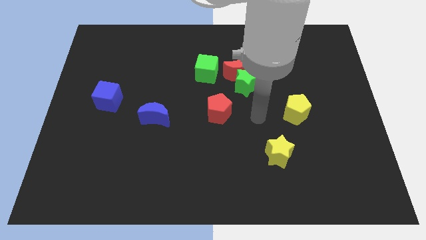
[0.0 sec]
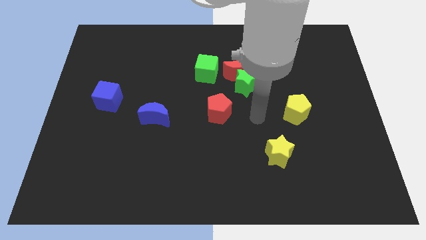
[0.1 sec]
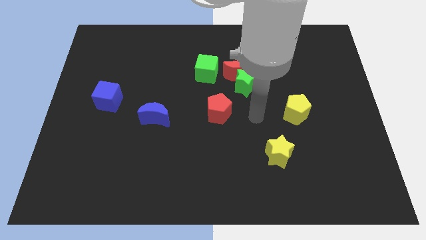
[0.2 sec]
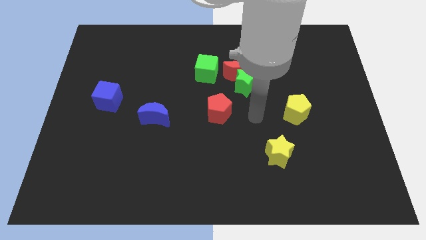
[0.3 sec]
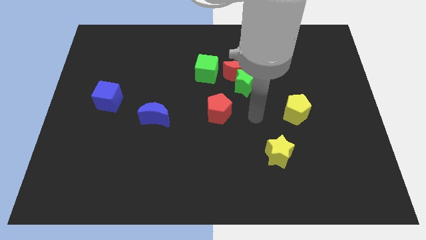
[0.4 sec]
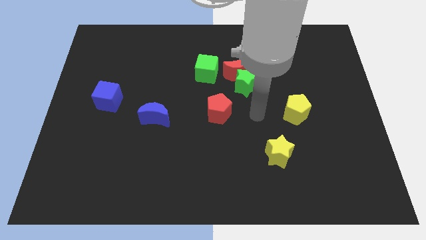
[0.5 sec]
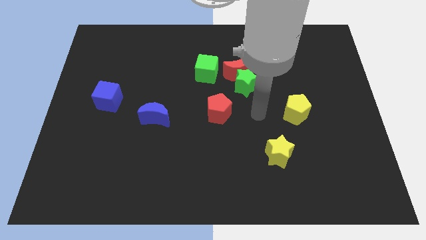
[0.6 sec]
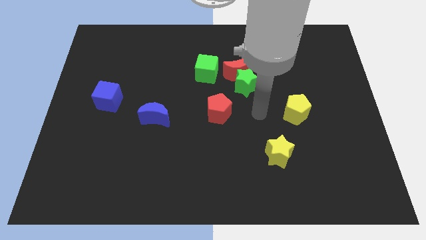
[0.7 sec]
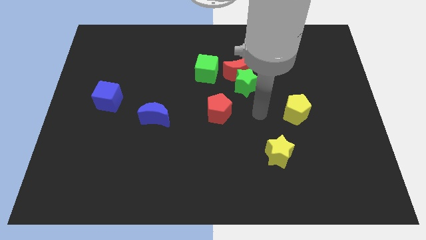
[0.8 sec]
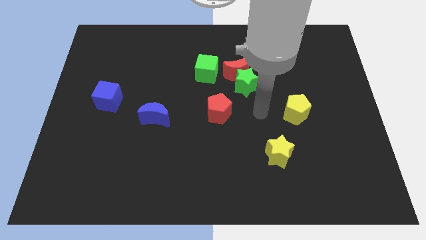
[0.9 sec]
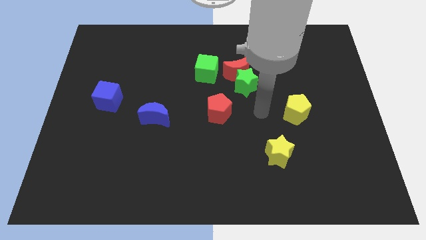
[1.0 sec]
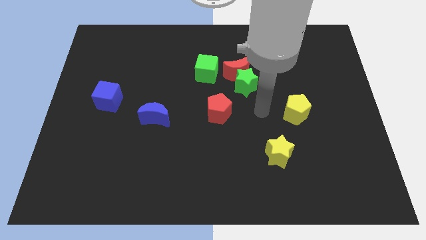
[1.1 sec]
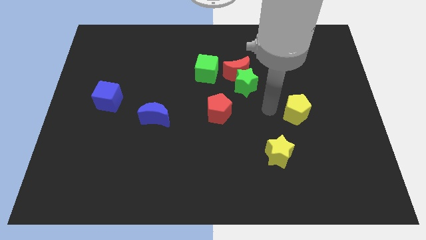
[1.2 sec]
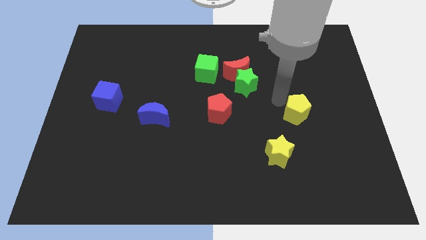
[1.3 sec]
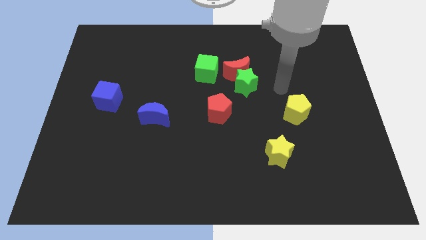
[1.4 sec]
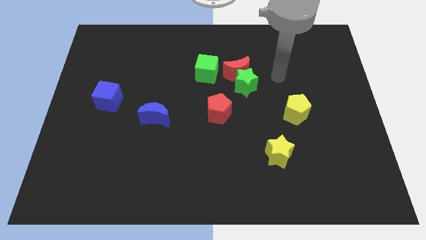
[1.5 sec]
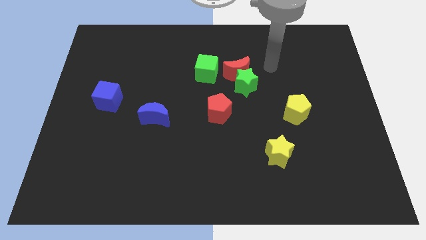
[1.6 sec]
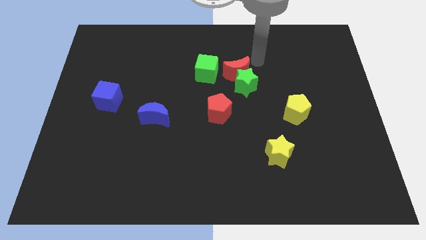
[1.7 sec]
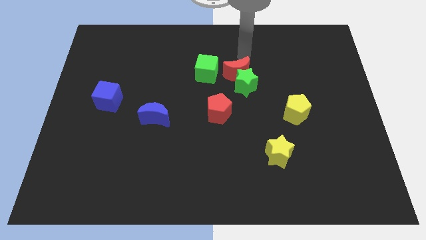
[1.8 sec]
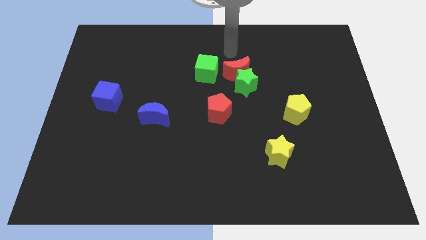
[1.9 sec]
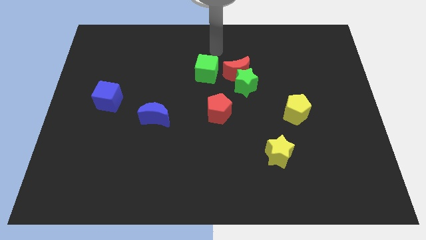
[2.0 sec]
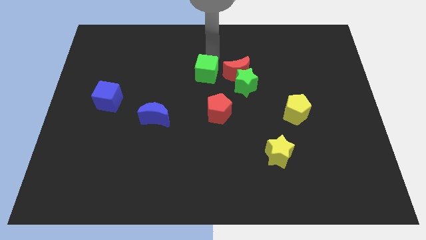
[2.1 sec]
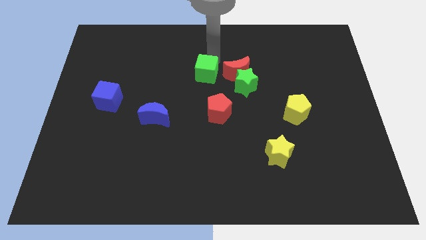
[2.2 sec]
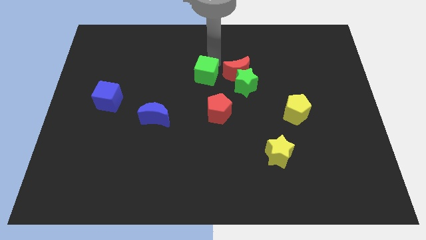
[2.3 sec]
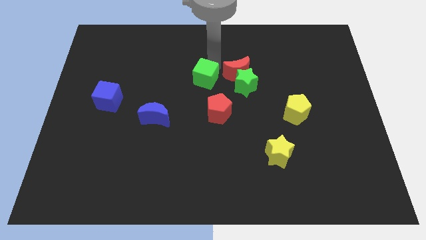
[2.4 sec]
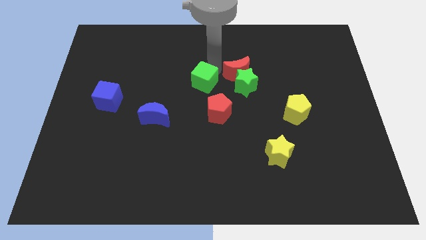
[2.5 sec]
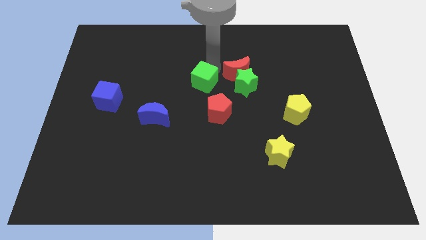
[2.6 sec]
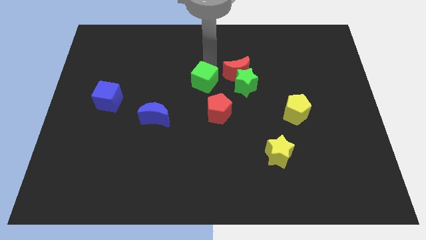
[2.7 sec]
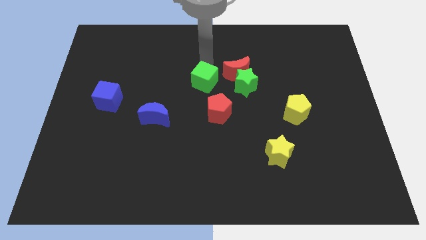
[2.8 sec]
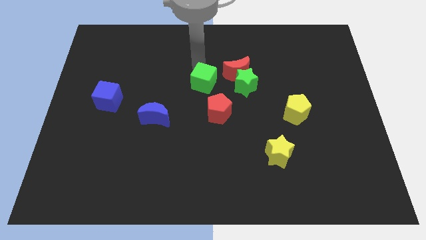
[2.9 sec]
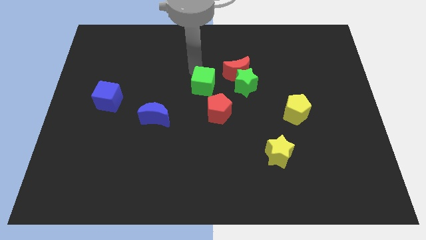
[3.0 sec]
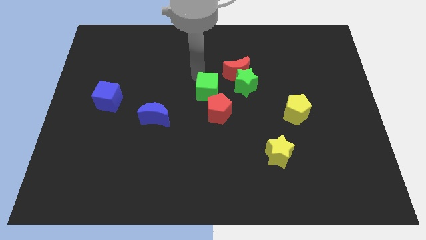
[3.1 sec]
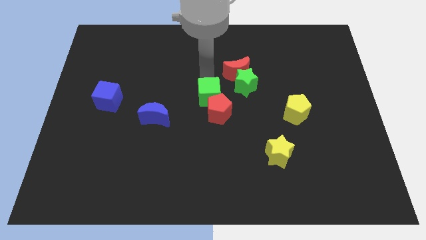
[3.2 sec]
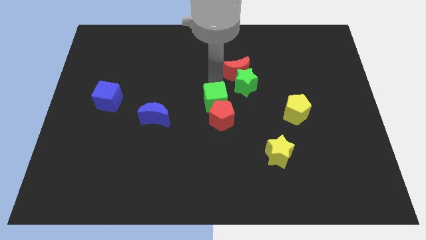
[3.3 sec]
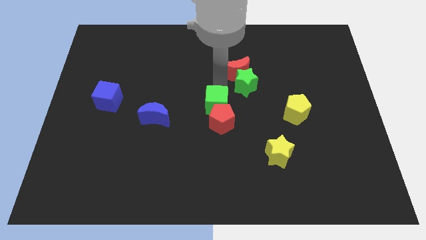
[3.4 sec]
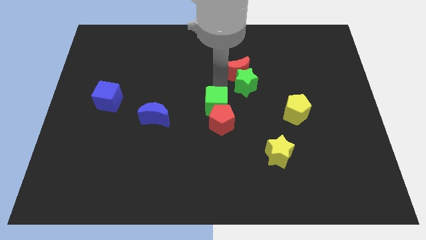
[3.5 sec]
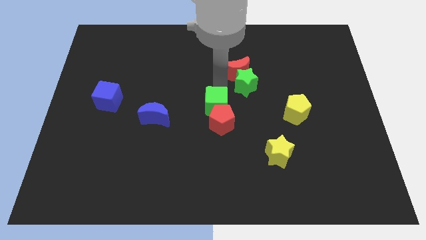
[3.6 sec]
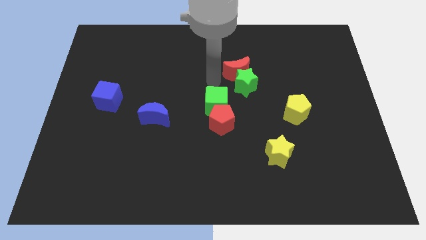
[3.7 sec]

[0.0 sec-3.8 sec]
move the green cube and red pentagon to the center

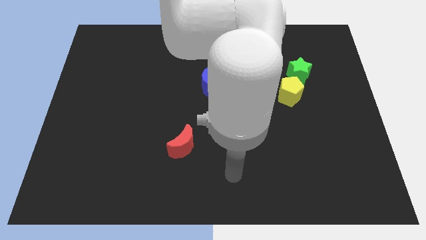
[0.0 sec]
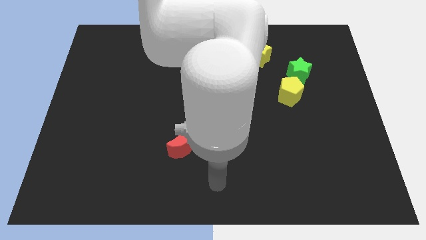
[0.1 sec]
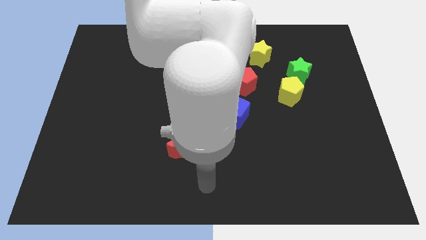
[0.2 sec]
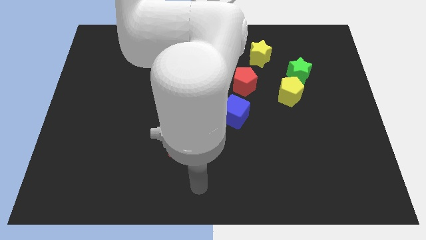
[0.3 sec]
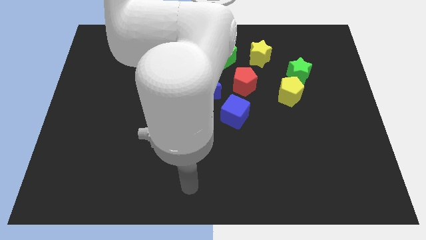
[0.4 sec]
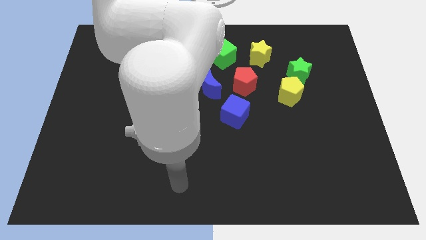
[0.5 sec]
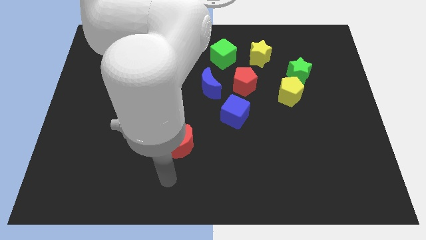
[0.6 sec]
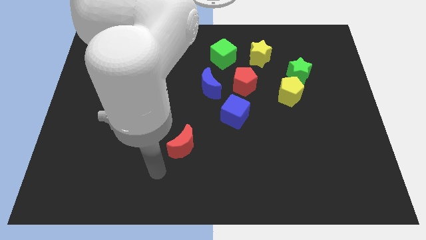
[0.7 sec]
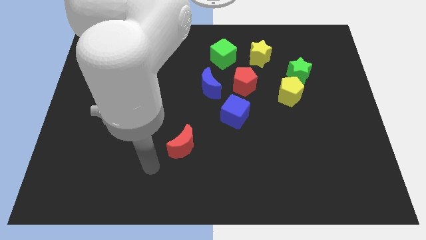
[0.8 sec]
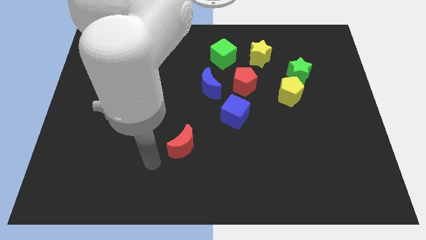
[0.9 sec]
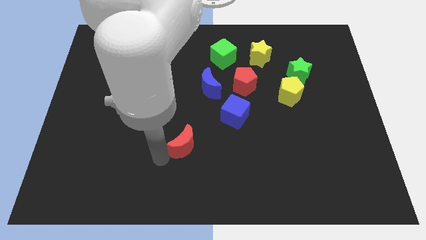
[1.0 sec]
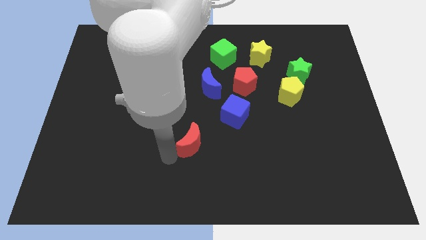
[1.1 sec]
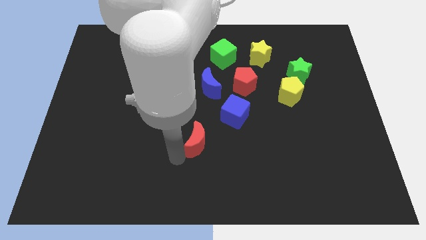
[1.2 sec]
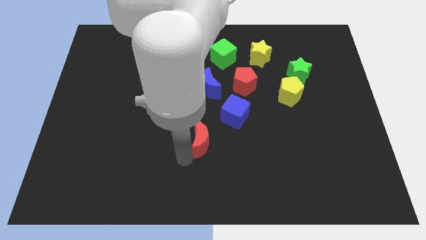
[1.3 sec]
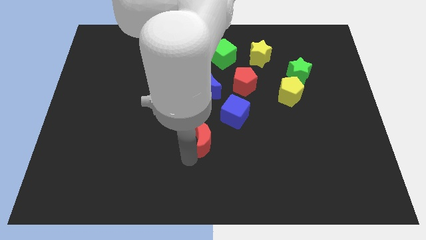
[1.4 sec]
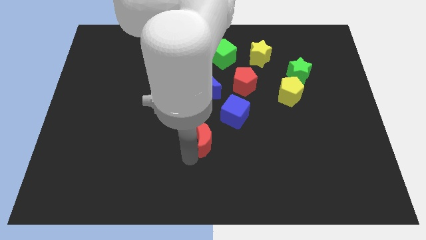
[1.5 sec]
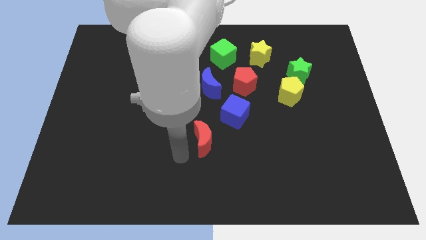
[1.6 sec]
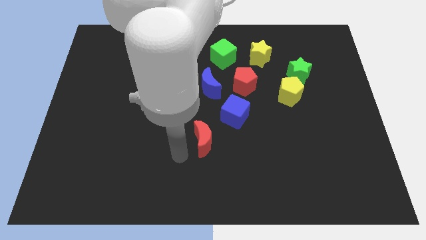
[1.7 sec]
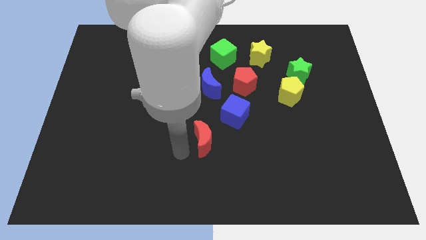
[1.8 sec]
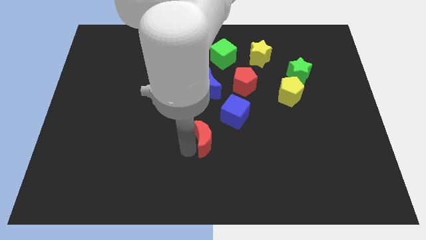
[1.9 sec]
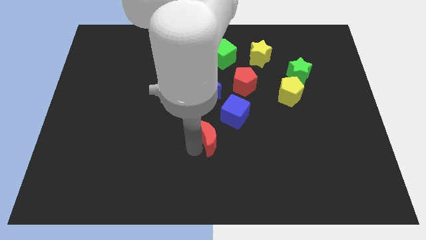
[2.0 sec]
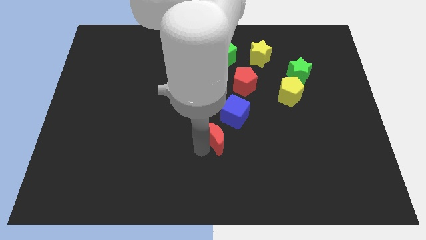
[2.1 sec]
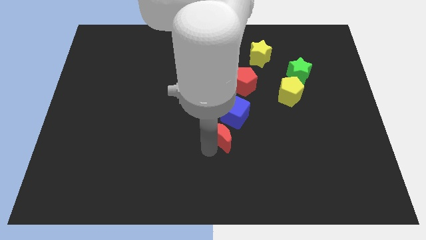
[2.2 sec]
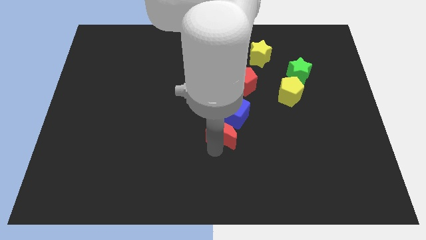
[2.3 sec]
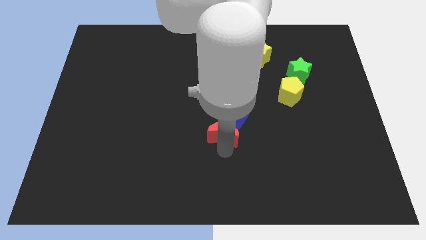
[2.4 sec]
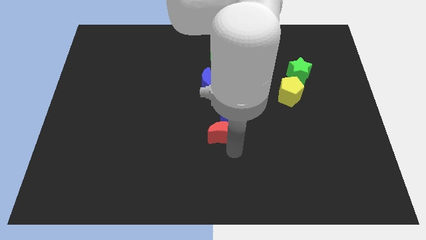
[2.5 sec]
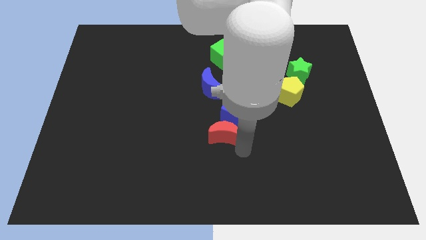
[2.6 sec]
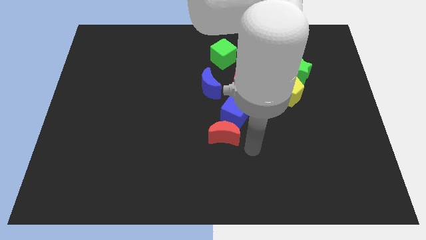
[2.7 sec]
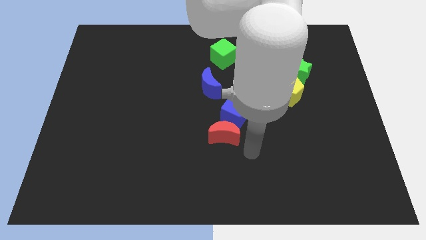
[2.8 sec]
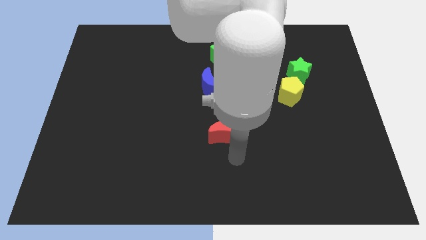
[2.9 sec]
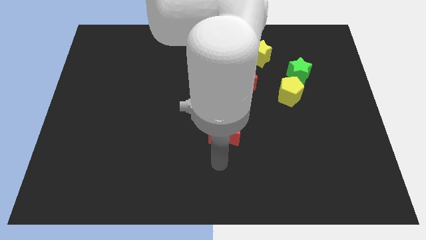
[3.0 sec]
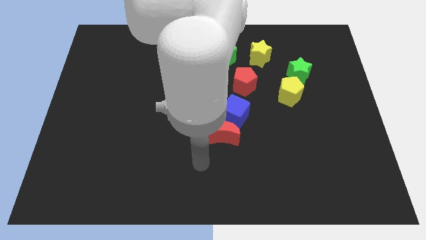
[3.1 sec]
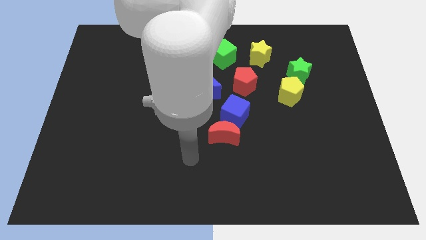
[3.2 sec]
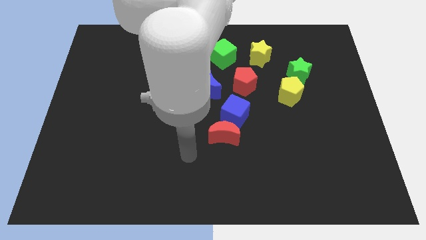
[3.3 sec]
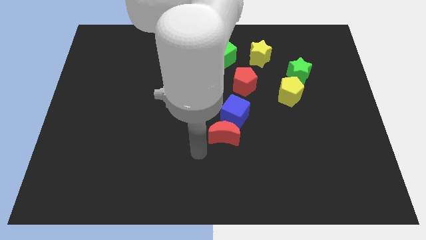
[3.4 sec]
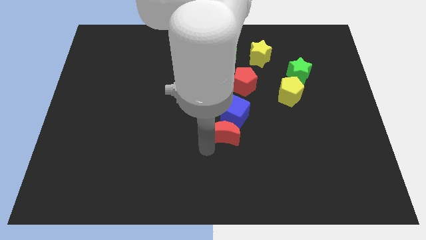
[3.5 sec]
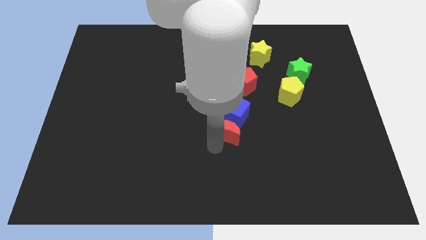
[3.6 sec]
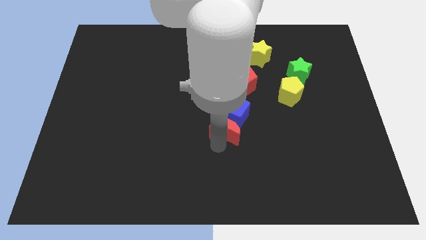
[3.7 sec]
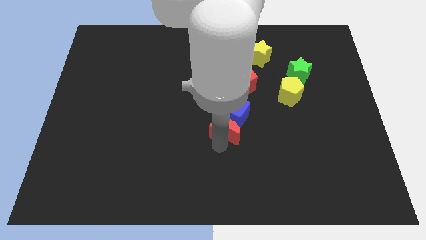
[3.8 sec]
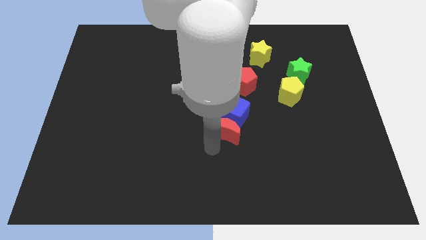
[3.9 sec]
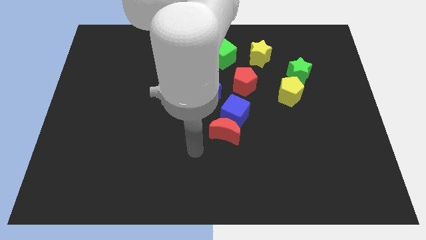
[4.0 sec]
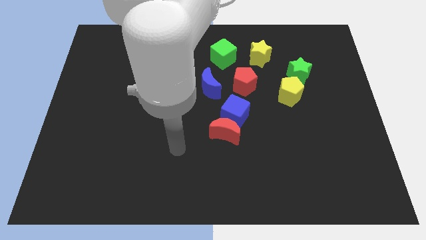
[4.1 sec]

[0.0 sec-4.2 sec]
place the red moon below the blue cube

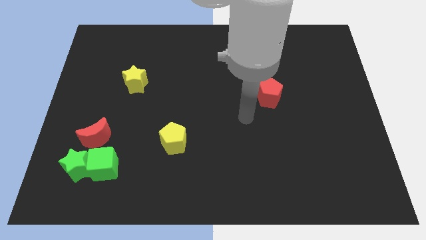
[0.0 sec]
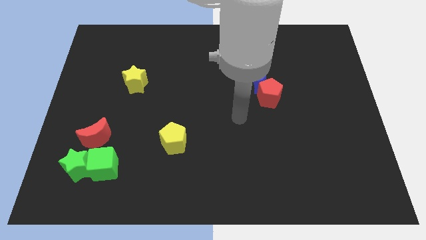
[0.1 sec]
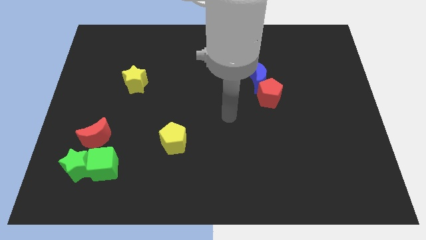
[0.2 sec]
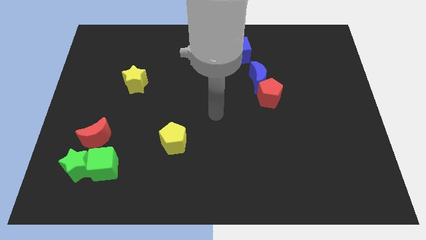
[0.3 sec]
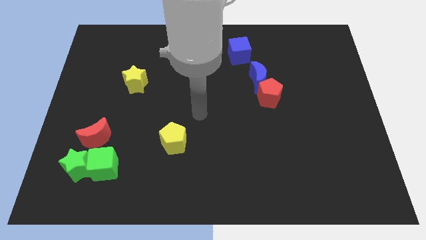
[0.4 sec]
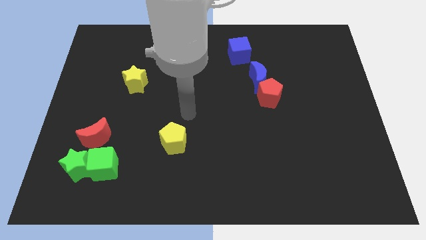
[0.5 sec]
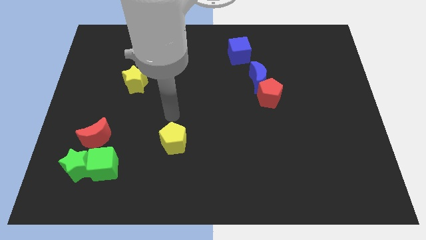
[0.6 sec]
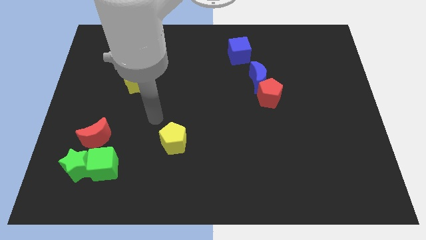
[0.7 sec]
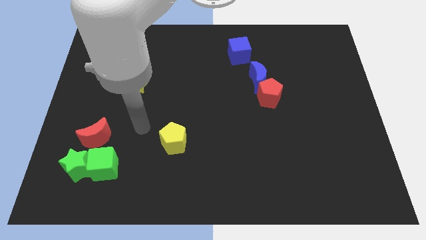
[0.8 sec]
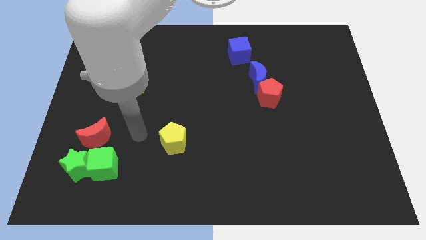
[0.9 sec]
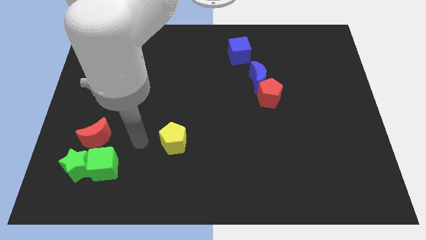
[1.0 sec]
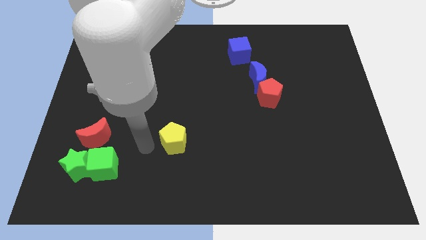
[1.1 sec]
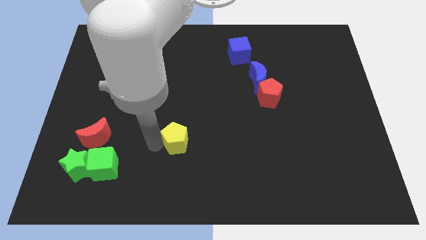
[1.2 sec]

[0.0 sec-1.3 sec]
point the arm in between the yellow pentagon and the red moon
